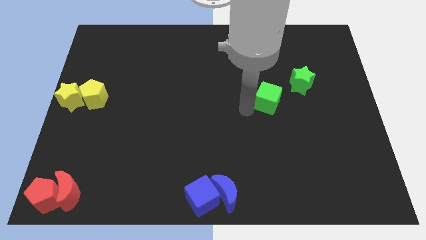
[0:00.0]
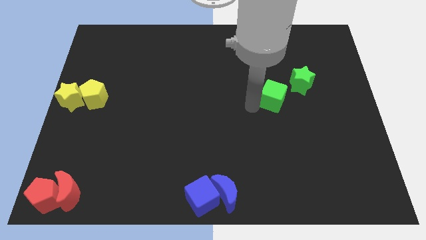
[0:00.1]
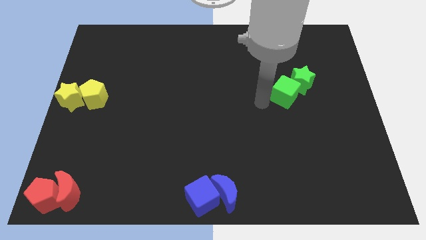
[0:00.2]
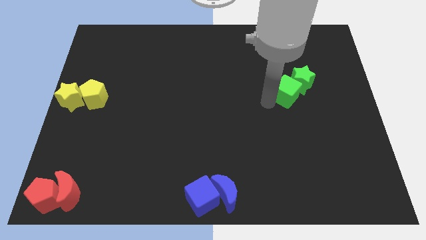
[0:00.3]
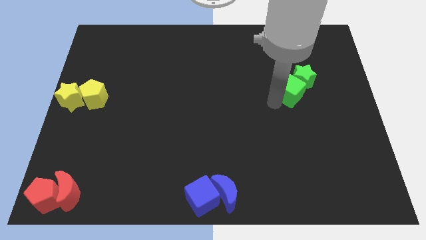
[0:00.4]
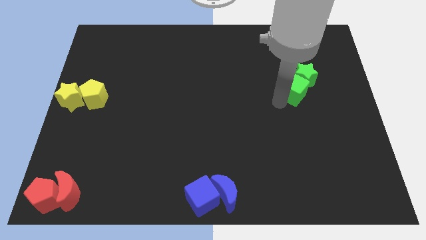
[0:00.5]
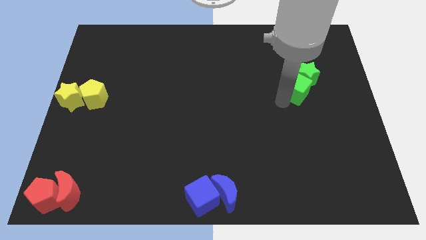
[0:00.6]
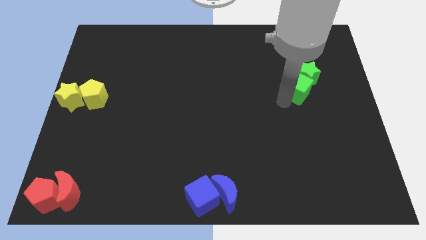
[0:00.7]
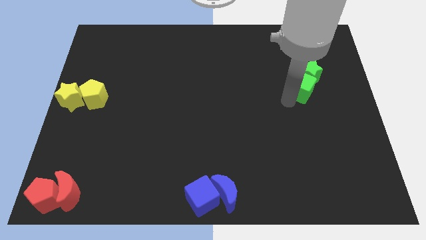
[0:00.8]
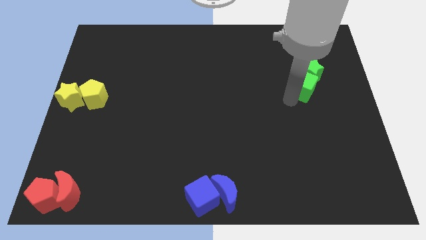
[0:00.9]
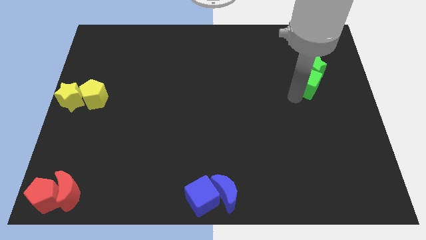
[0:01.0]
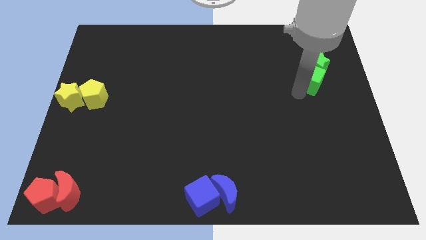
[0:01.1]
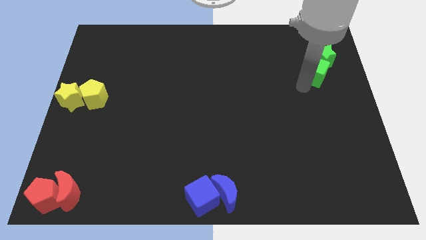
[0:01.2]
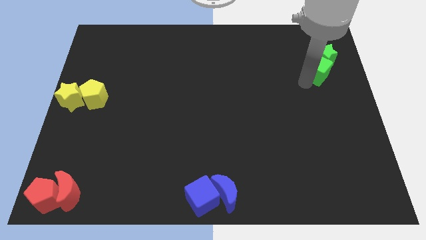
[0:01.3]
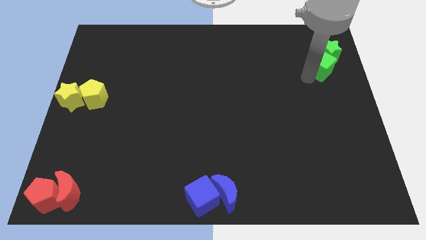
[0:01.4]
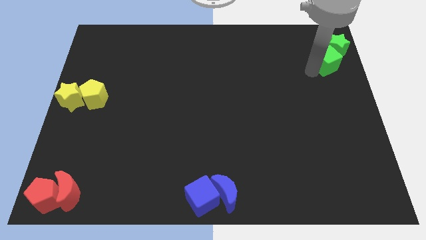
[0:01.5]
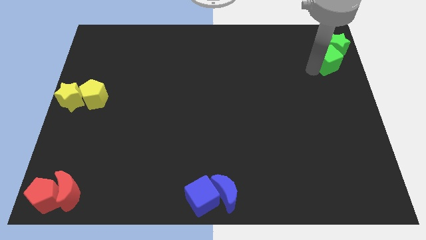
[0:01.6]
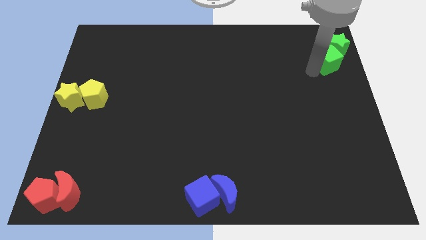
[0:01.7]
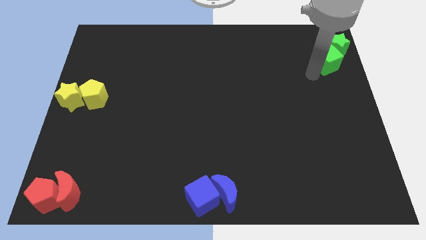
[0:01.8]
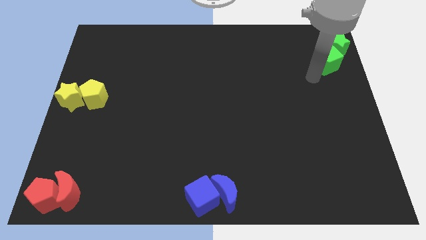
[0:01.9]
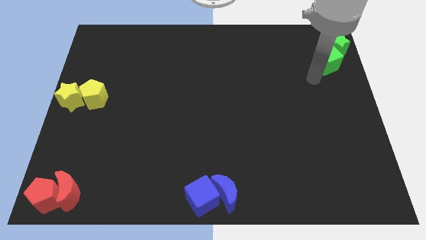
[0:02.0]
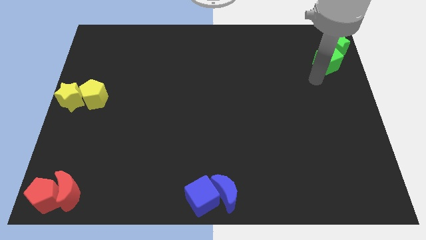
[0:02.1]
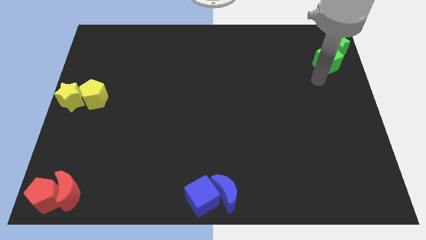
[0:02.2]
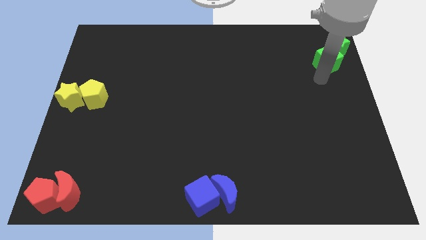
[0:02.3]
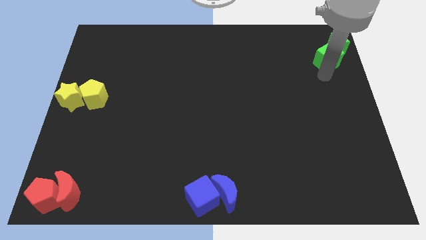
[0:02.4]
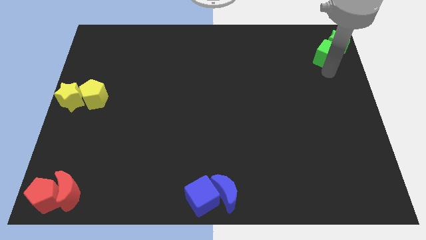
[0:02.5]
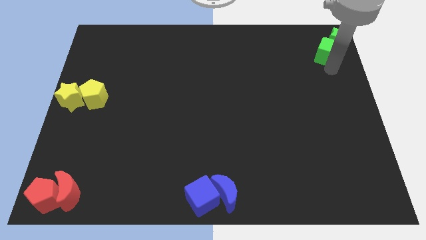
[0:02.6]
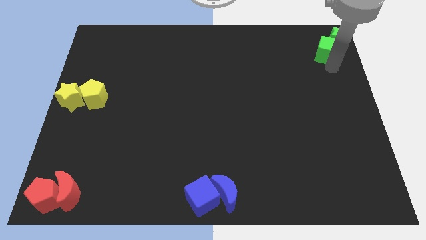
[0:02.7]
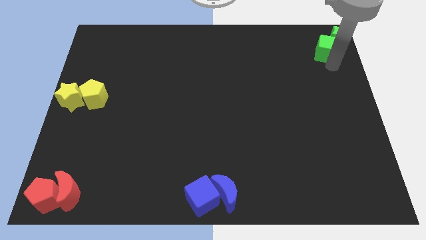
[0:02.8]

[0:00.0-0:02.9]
push the green cube along with green star to the top right to the board

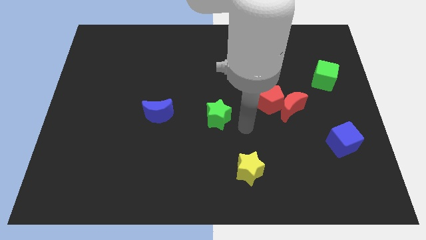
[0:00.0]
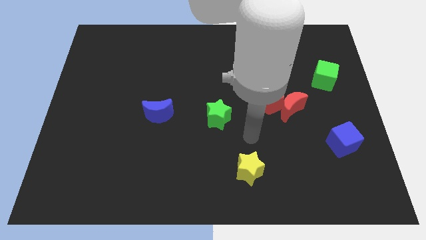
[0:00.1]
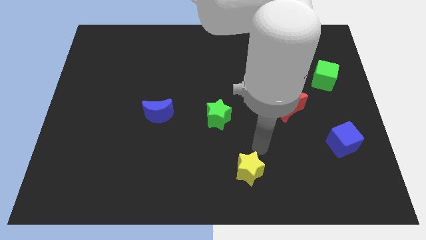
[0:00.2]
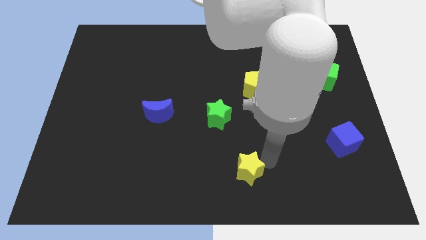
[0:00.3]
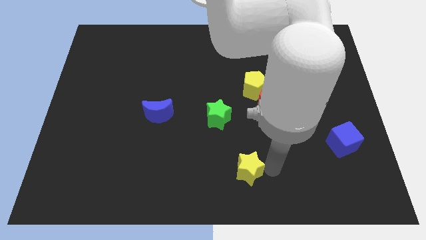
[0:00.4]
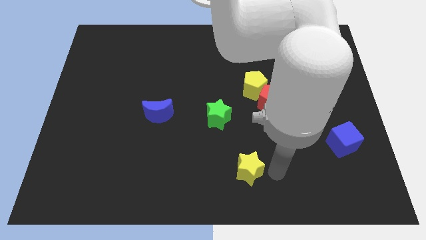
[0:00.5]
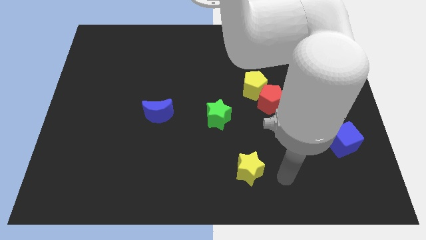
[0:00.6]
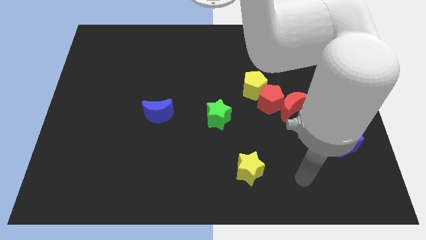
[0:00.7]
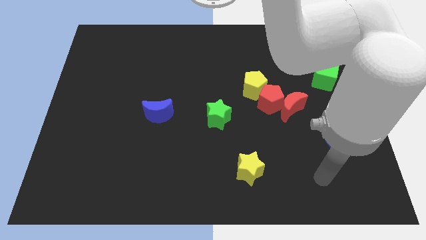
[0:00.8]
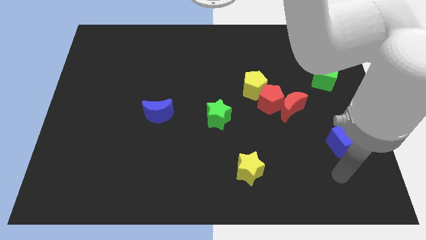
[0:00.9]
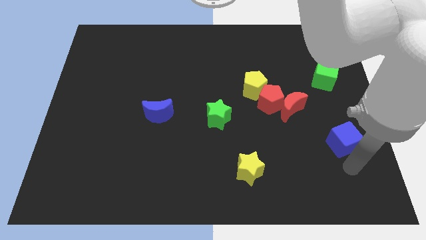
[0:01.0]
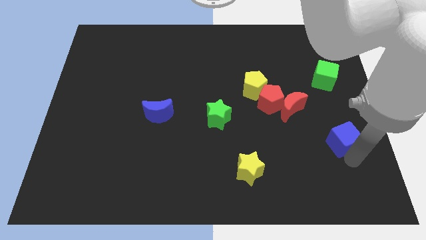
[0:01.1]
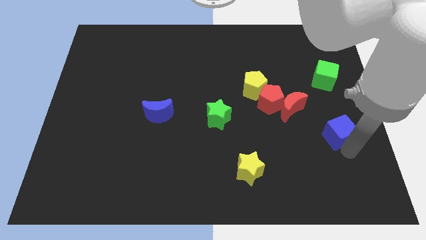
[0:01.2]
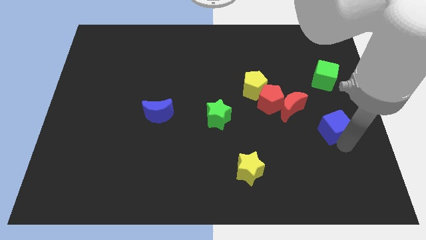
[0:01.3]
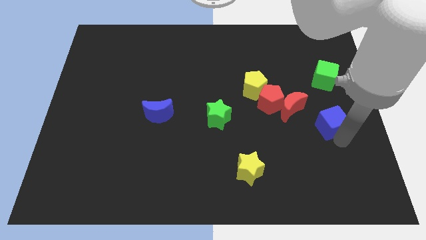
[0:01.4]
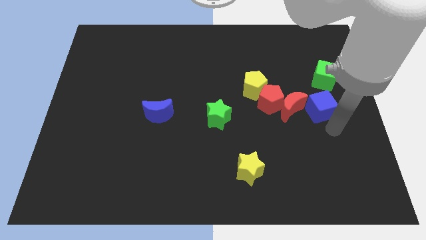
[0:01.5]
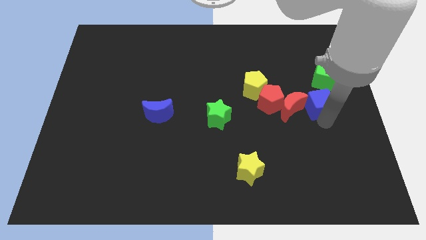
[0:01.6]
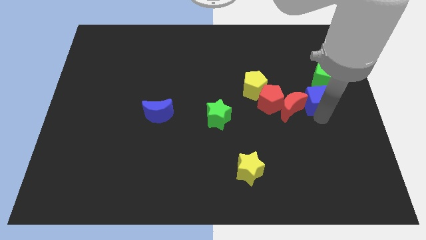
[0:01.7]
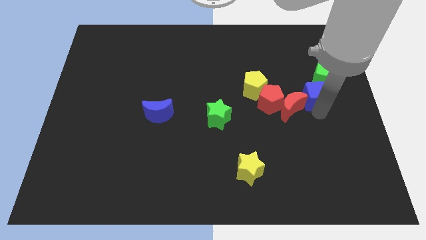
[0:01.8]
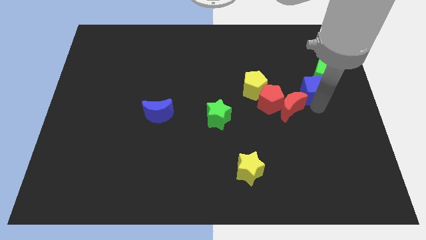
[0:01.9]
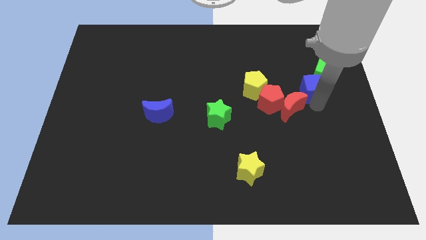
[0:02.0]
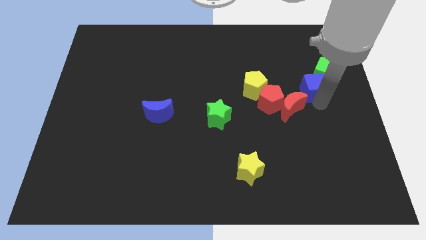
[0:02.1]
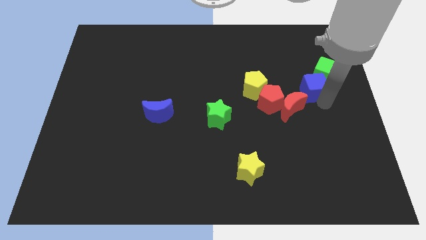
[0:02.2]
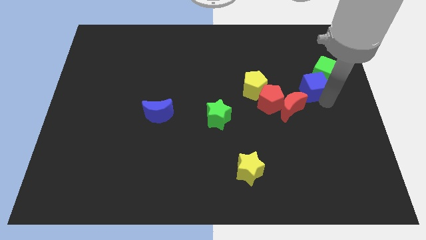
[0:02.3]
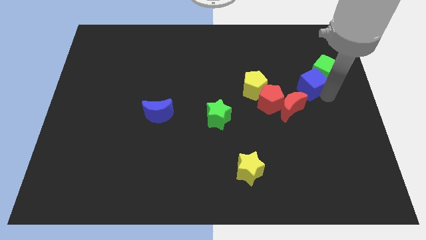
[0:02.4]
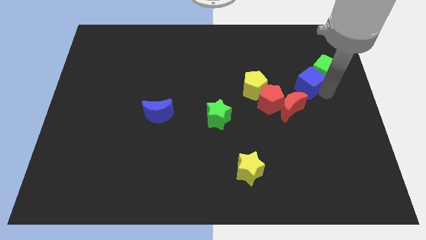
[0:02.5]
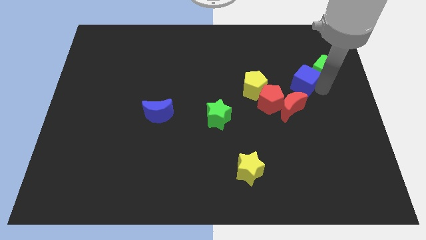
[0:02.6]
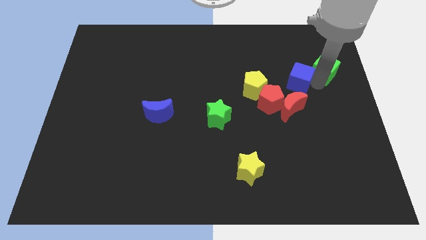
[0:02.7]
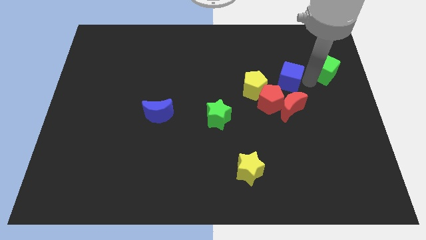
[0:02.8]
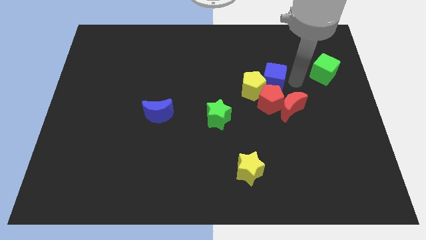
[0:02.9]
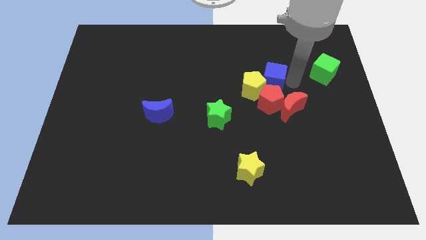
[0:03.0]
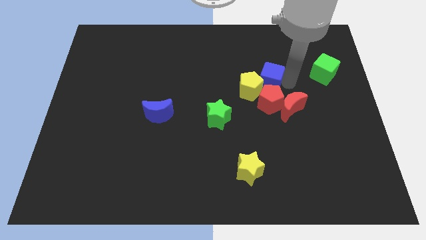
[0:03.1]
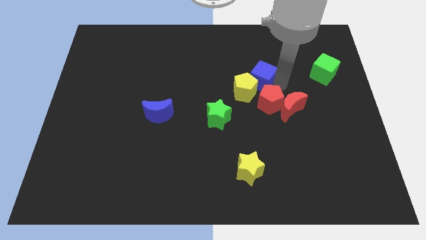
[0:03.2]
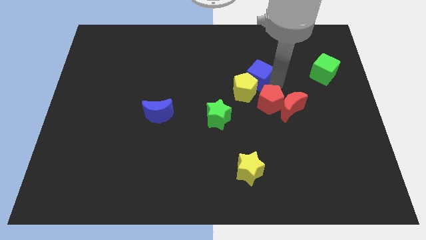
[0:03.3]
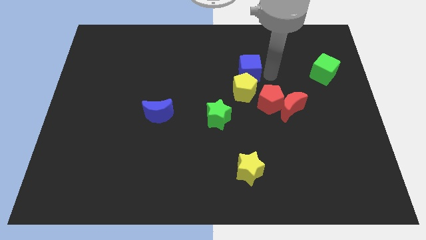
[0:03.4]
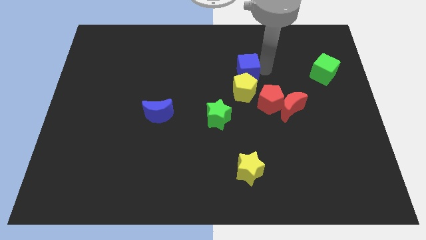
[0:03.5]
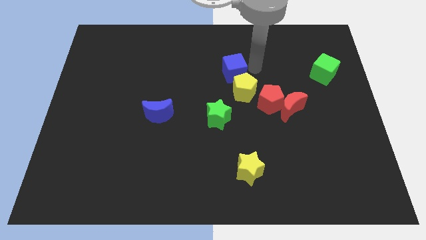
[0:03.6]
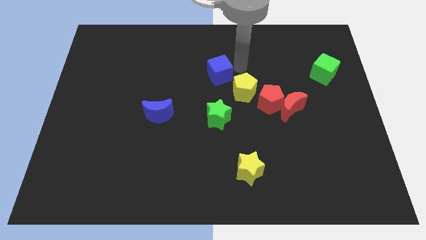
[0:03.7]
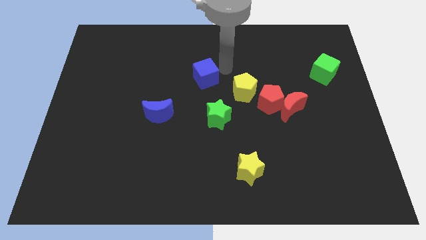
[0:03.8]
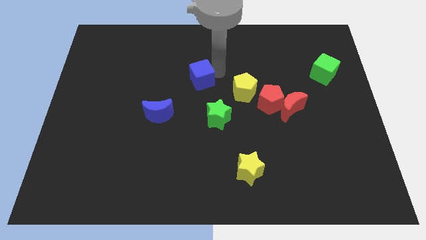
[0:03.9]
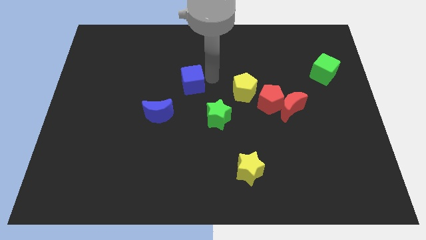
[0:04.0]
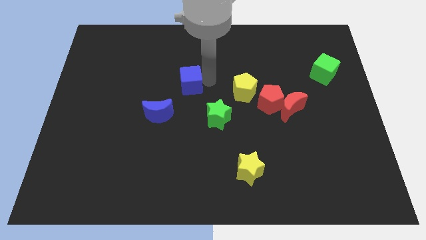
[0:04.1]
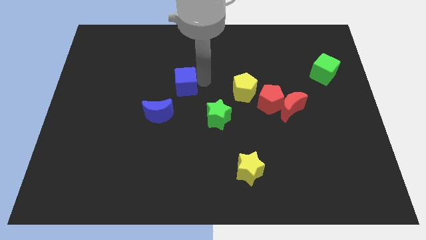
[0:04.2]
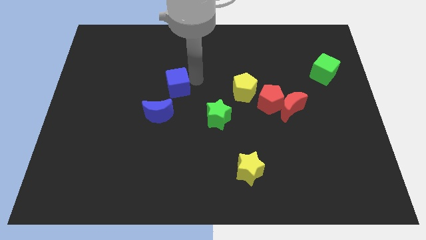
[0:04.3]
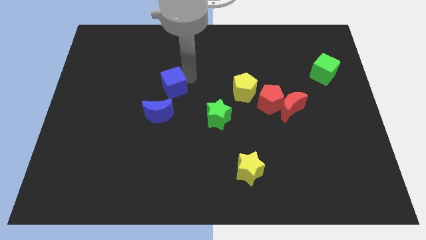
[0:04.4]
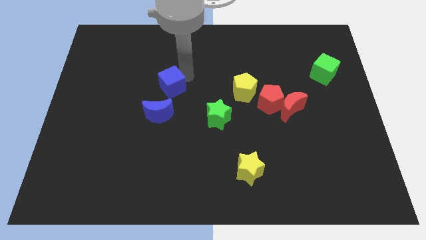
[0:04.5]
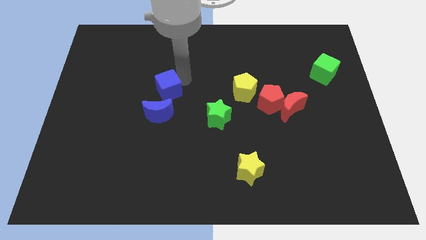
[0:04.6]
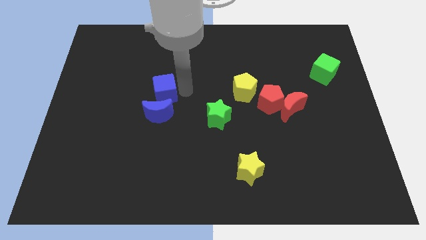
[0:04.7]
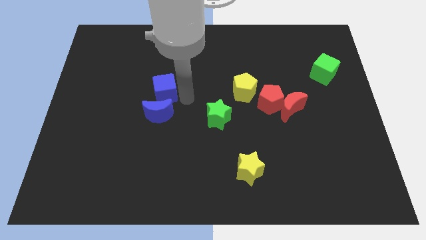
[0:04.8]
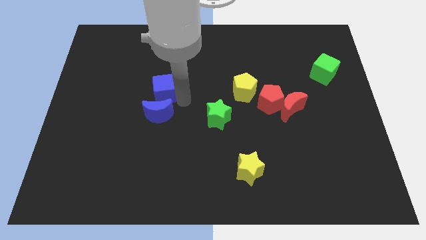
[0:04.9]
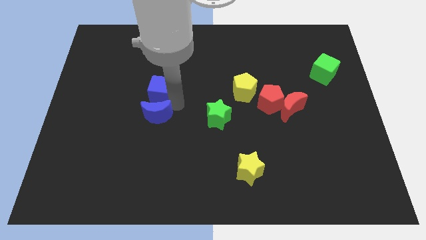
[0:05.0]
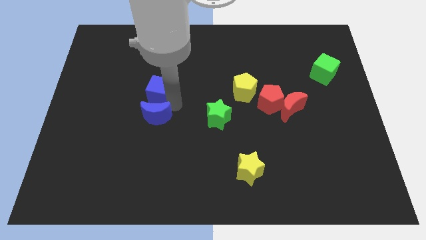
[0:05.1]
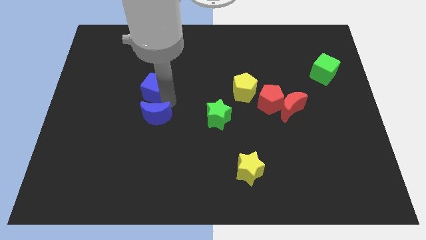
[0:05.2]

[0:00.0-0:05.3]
place the blue cube above the blue moon

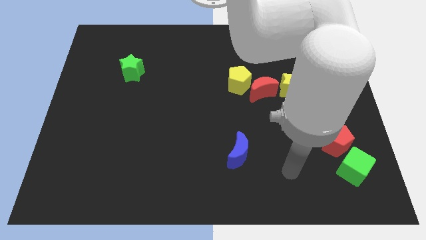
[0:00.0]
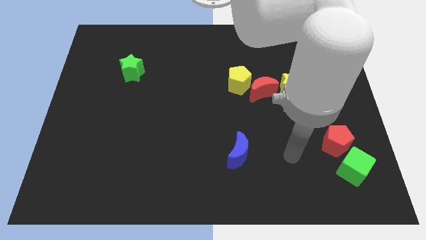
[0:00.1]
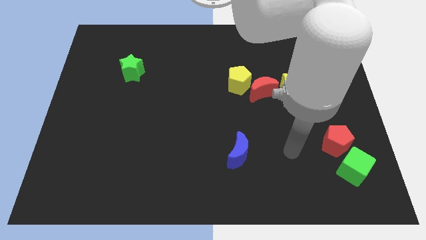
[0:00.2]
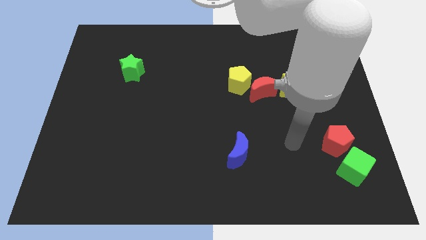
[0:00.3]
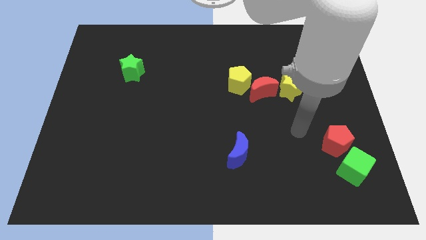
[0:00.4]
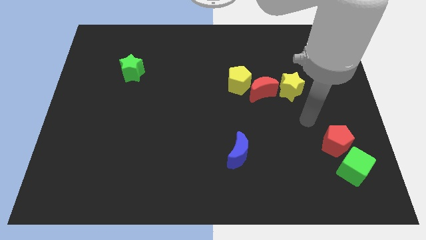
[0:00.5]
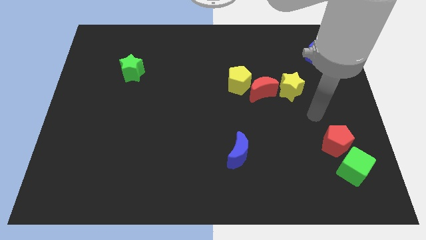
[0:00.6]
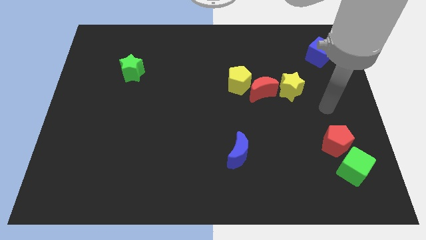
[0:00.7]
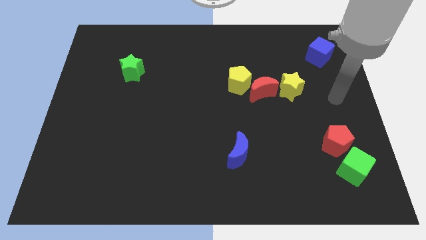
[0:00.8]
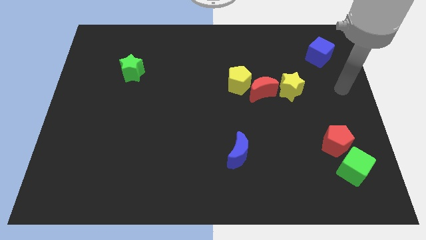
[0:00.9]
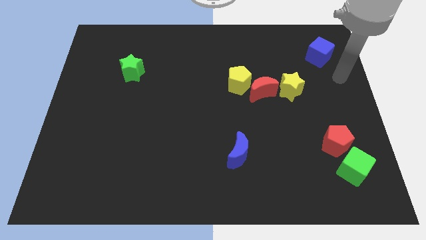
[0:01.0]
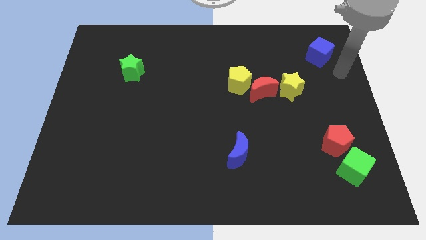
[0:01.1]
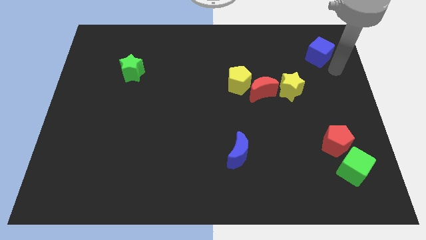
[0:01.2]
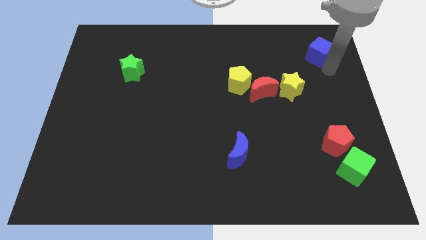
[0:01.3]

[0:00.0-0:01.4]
place your arm at the bottom of the blue cube
